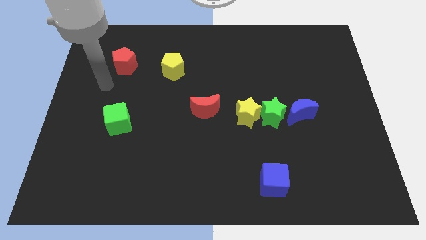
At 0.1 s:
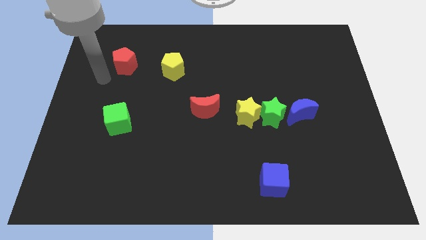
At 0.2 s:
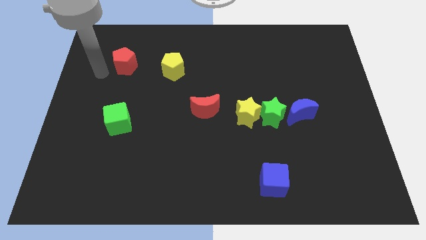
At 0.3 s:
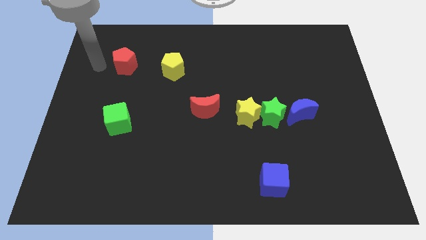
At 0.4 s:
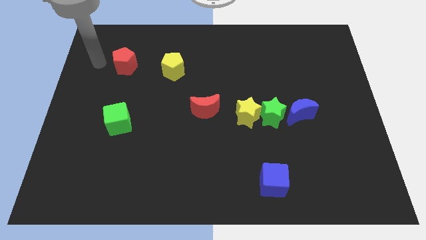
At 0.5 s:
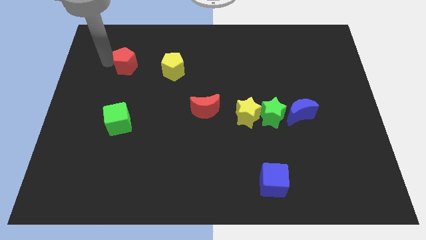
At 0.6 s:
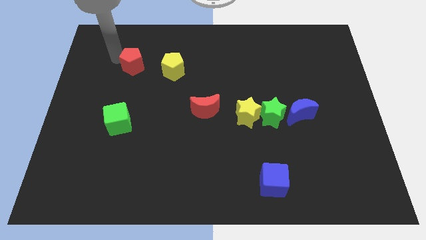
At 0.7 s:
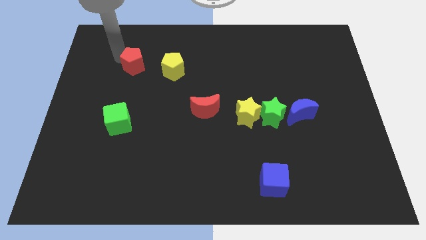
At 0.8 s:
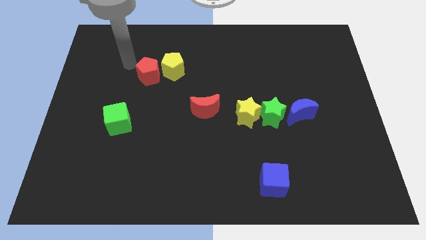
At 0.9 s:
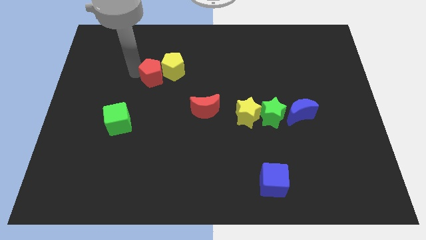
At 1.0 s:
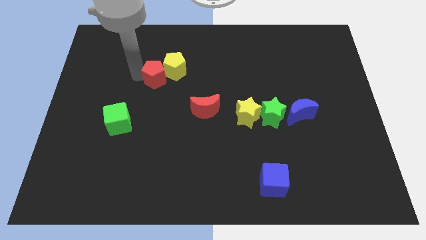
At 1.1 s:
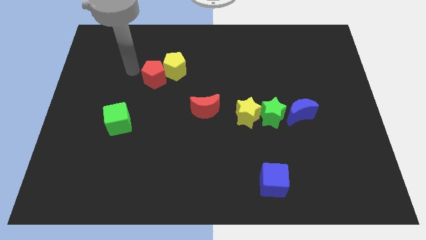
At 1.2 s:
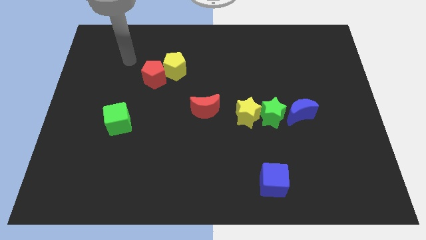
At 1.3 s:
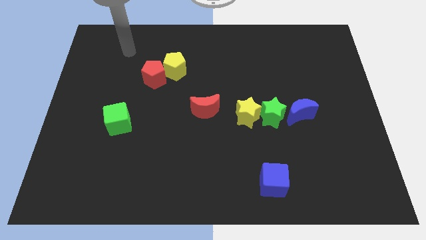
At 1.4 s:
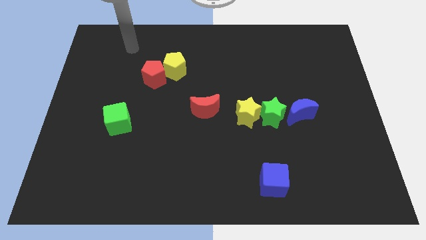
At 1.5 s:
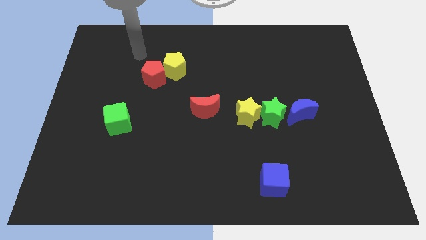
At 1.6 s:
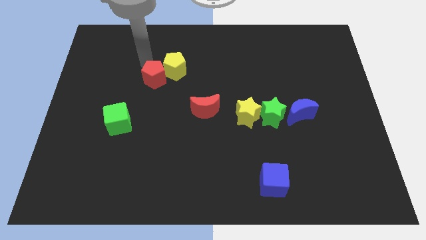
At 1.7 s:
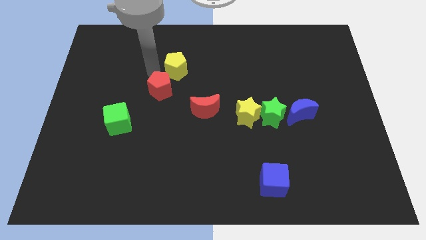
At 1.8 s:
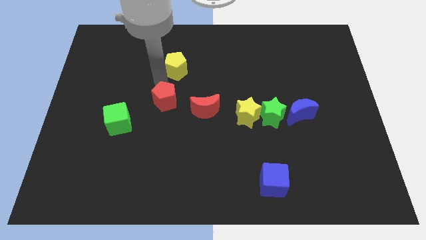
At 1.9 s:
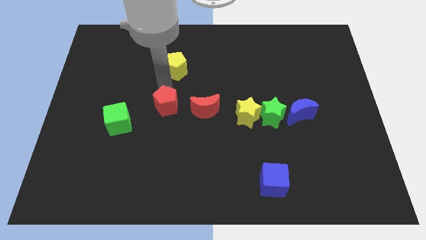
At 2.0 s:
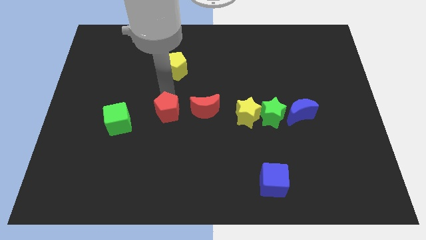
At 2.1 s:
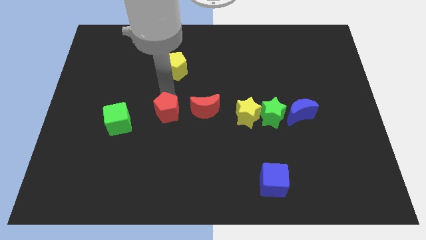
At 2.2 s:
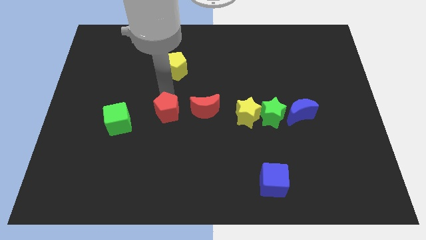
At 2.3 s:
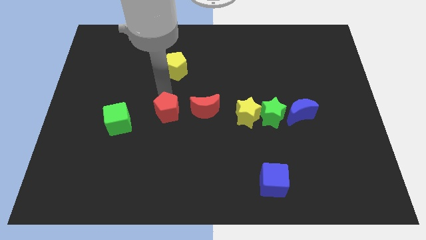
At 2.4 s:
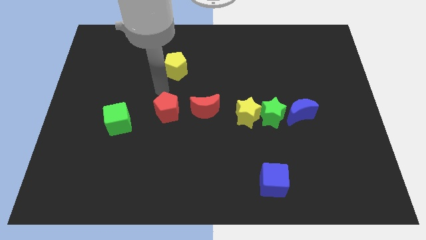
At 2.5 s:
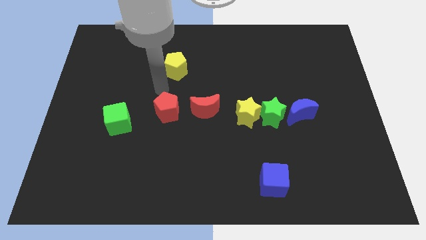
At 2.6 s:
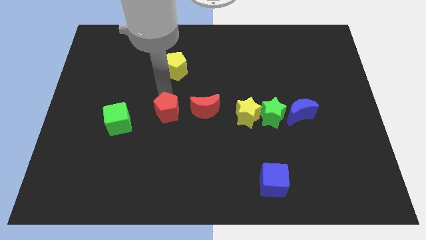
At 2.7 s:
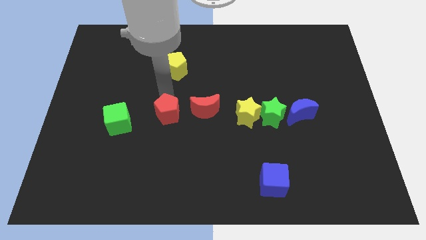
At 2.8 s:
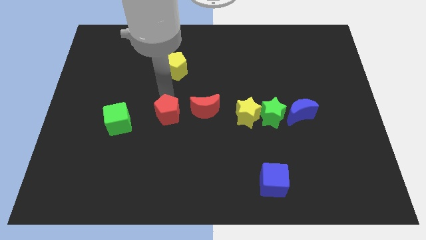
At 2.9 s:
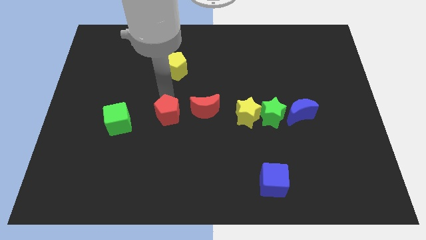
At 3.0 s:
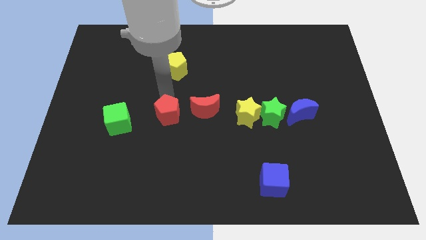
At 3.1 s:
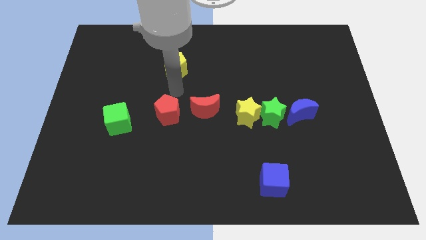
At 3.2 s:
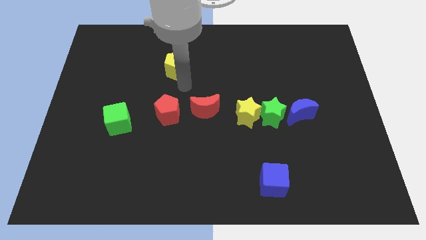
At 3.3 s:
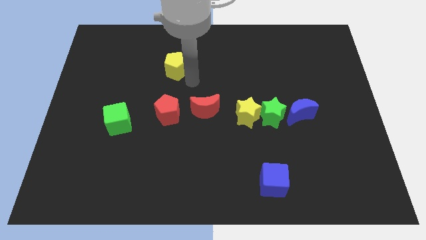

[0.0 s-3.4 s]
move the red pentagon in between red moon and green cube

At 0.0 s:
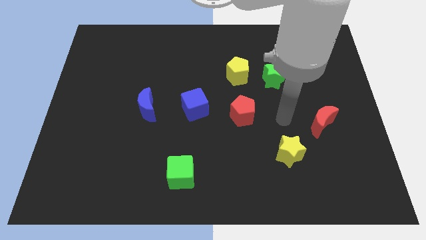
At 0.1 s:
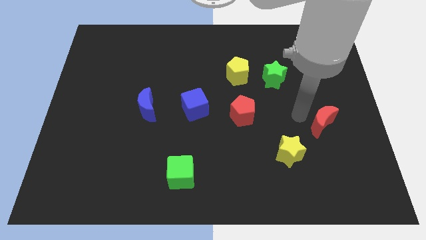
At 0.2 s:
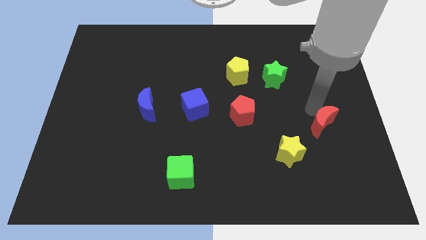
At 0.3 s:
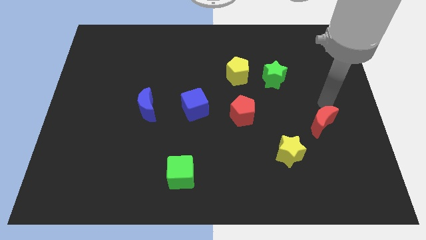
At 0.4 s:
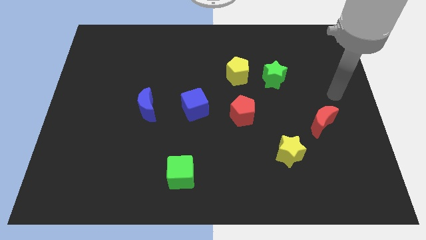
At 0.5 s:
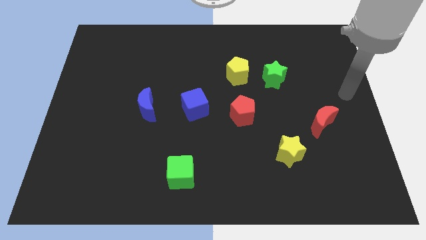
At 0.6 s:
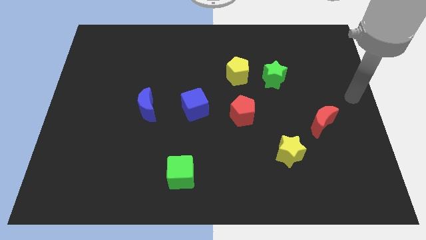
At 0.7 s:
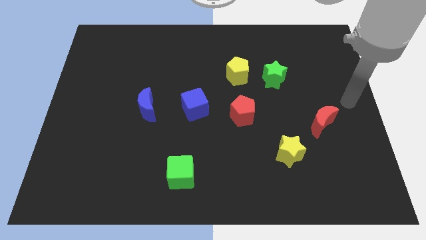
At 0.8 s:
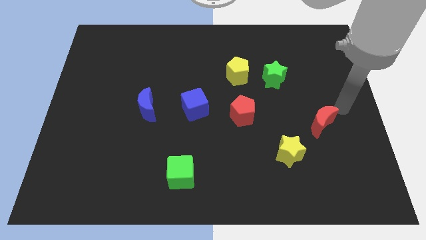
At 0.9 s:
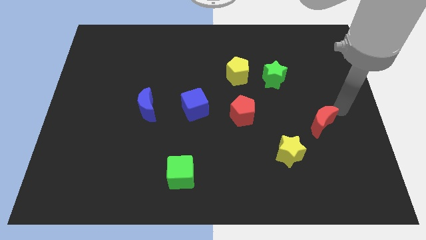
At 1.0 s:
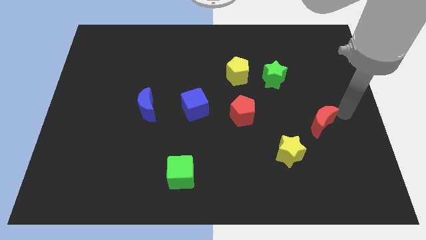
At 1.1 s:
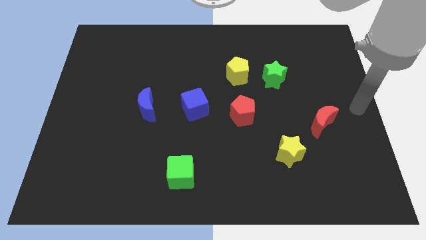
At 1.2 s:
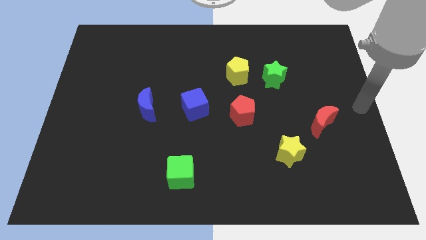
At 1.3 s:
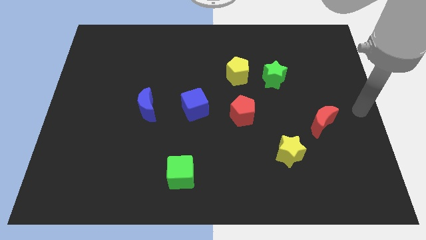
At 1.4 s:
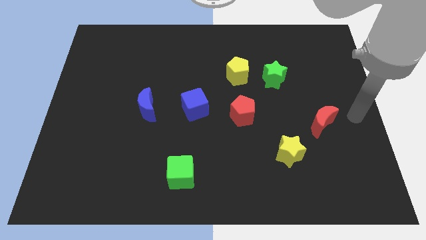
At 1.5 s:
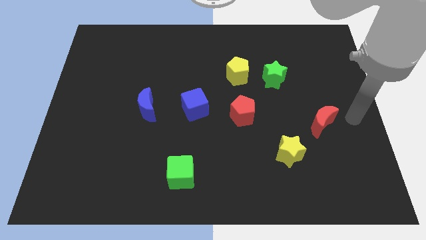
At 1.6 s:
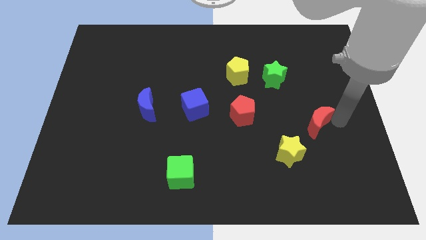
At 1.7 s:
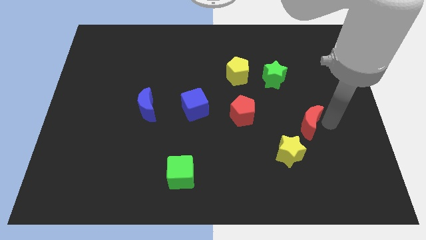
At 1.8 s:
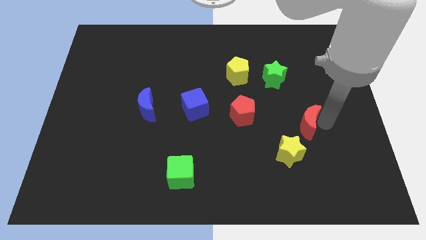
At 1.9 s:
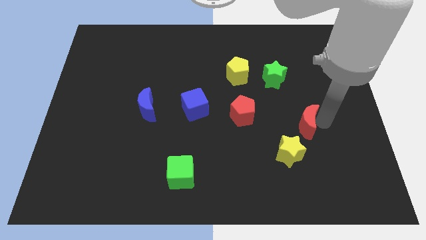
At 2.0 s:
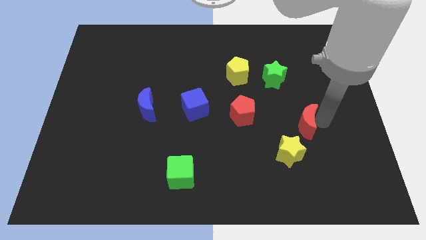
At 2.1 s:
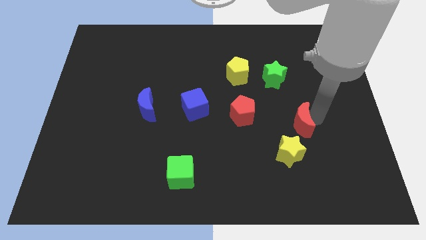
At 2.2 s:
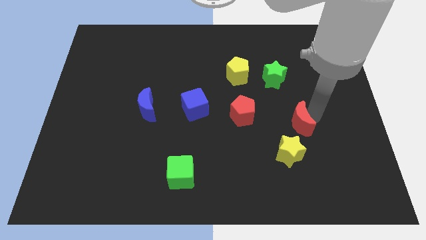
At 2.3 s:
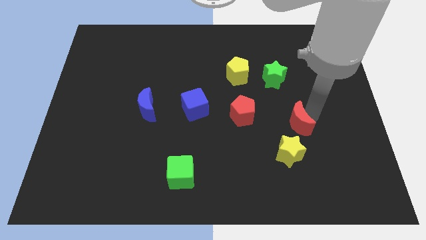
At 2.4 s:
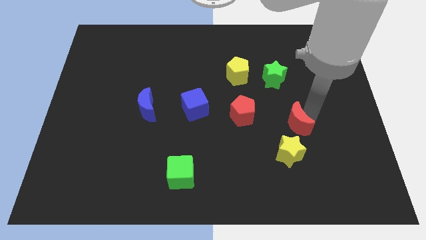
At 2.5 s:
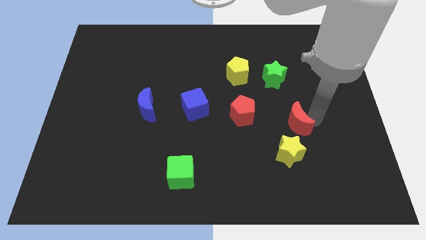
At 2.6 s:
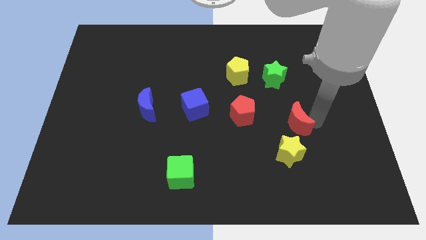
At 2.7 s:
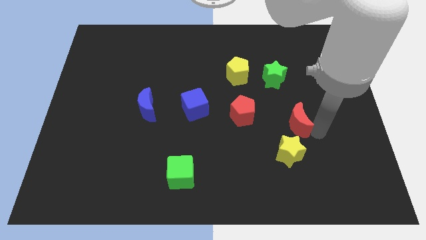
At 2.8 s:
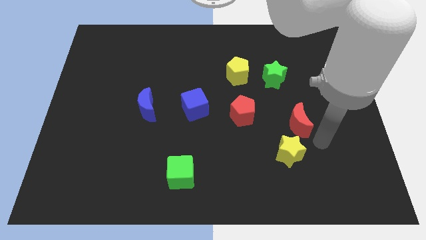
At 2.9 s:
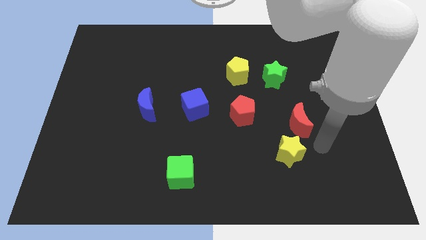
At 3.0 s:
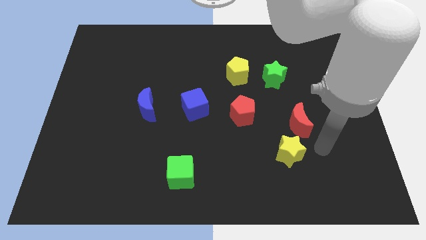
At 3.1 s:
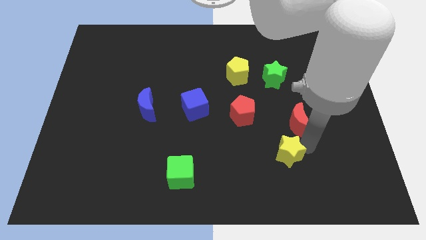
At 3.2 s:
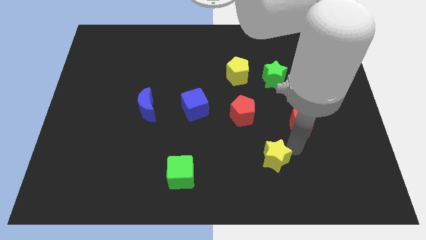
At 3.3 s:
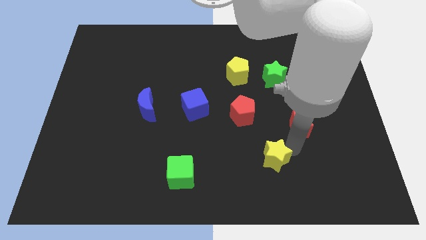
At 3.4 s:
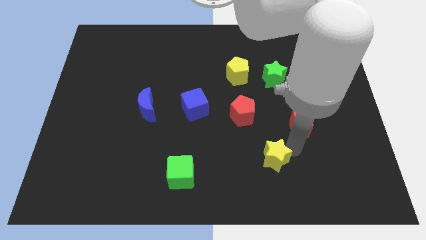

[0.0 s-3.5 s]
slide the red moon slightly to the left

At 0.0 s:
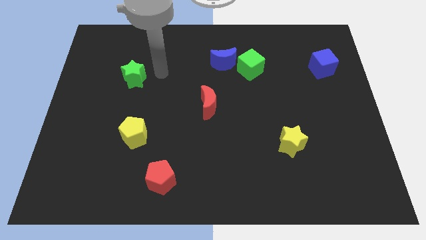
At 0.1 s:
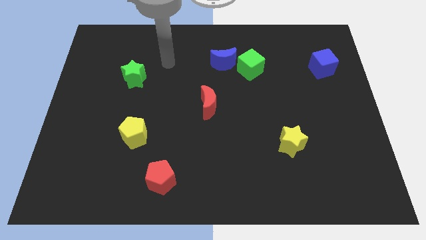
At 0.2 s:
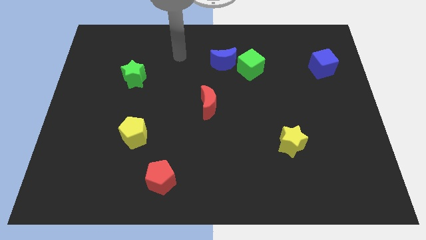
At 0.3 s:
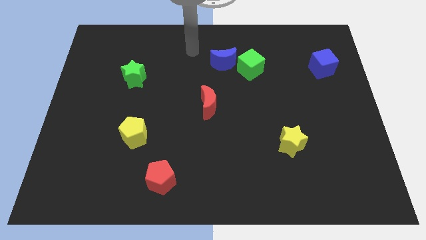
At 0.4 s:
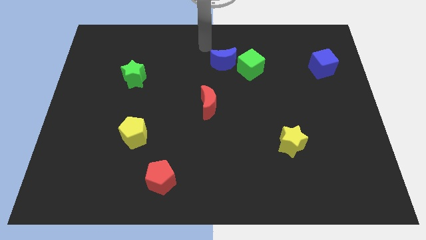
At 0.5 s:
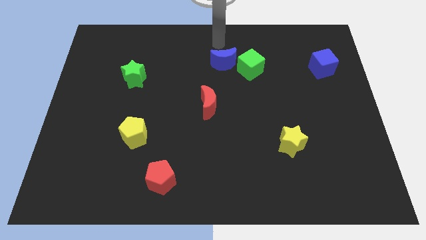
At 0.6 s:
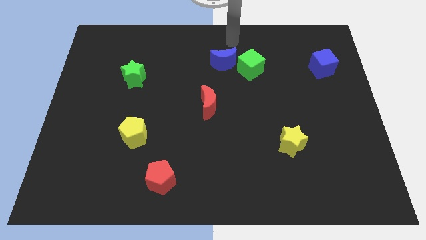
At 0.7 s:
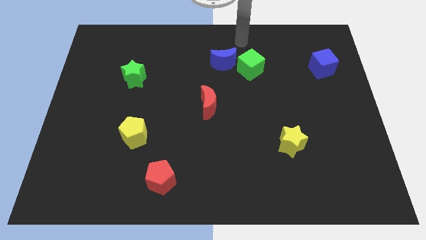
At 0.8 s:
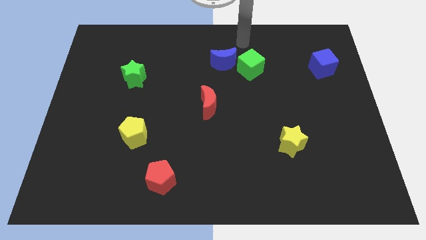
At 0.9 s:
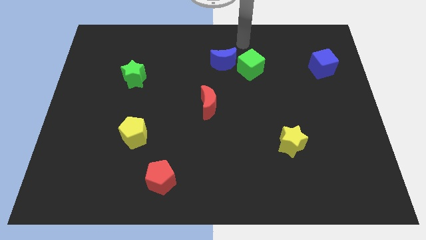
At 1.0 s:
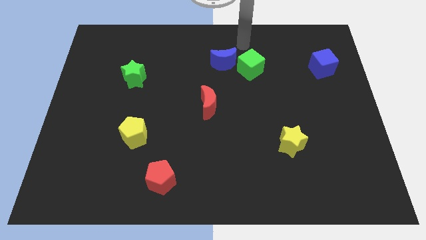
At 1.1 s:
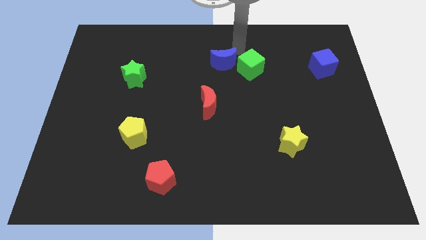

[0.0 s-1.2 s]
move your arm towards the blue crescent

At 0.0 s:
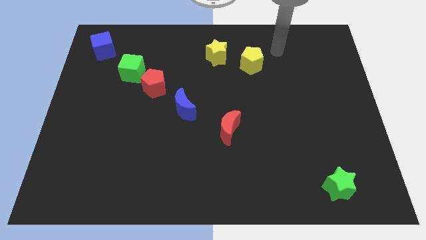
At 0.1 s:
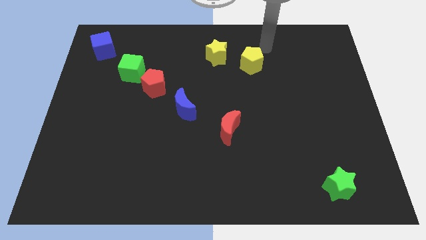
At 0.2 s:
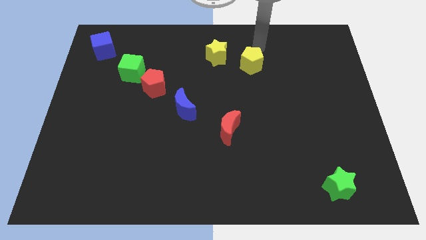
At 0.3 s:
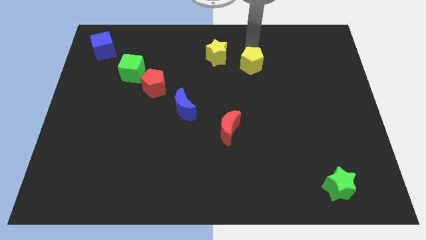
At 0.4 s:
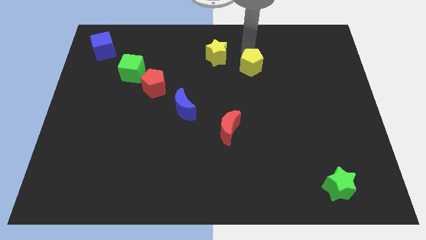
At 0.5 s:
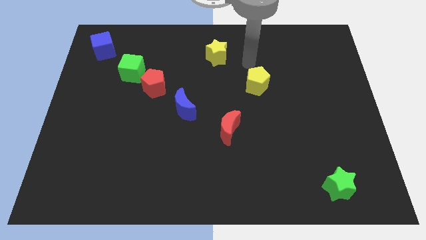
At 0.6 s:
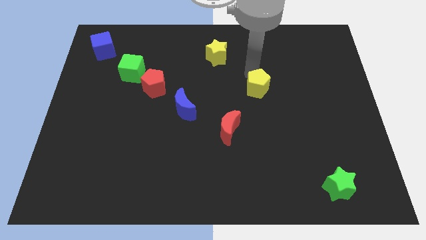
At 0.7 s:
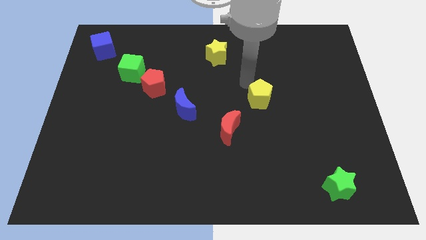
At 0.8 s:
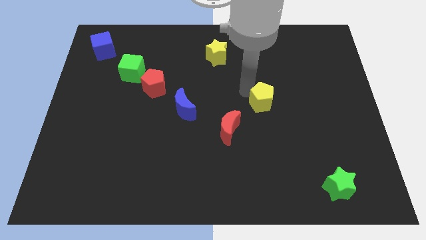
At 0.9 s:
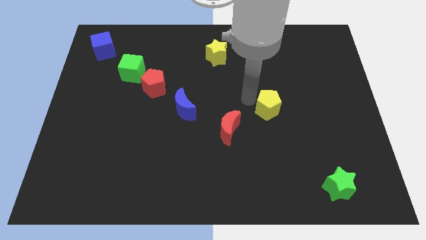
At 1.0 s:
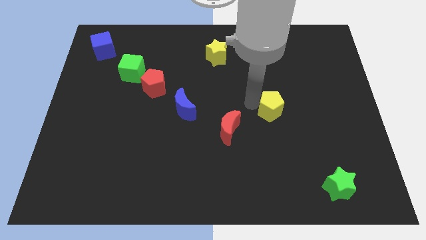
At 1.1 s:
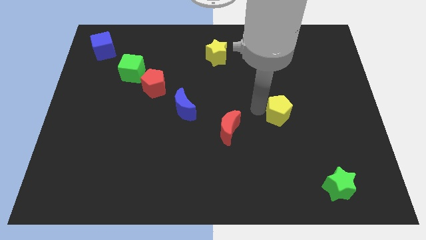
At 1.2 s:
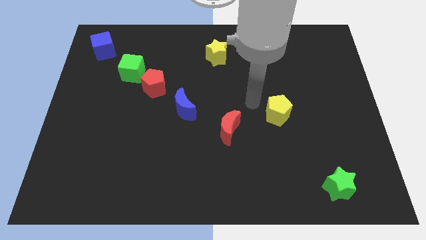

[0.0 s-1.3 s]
push the yellow pentagon downward
